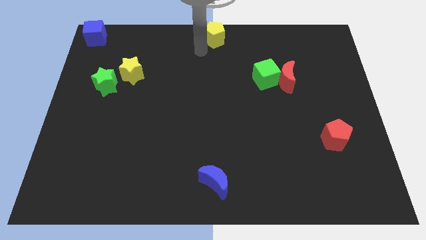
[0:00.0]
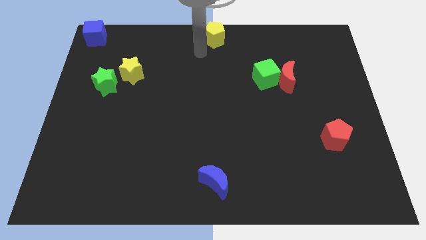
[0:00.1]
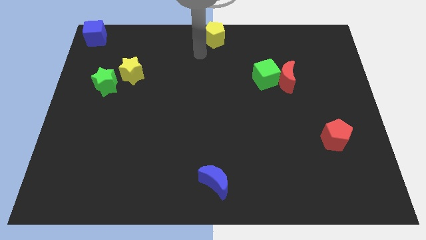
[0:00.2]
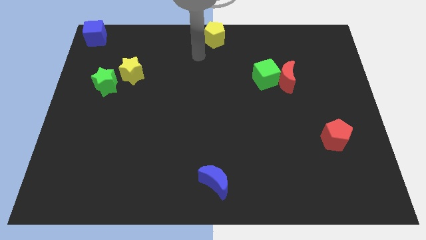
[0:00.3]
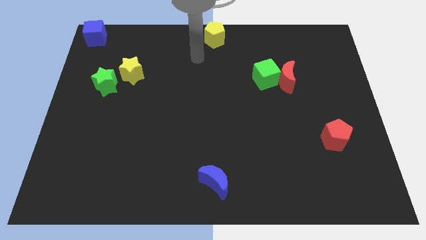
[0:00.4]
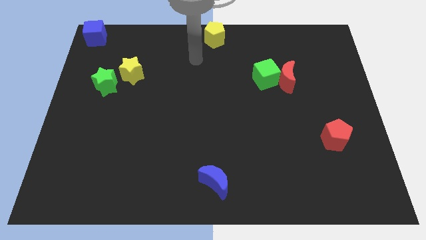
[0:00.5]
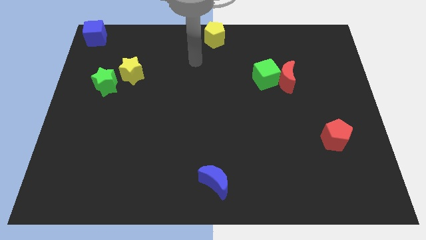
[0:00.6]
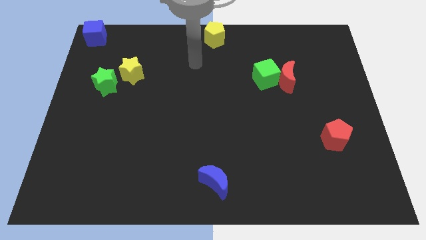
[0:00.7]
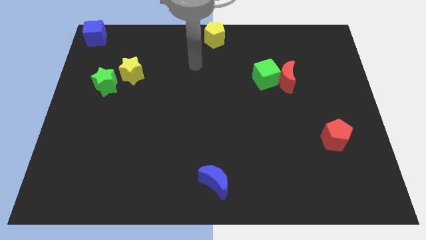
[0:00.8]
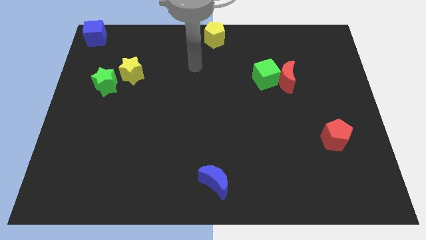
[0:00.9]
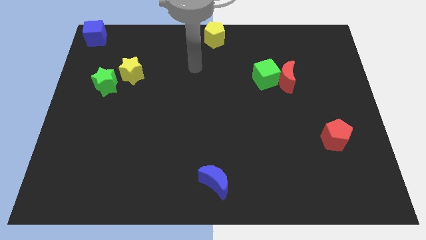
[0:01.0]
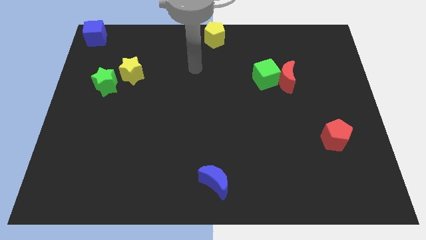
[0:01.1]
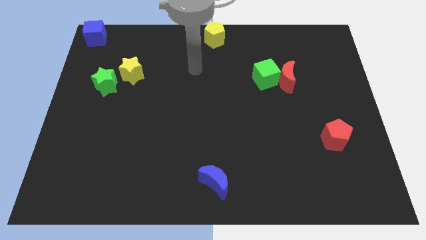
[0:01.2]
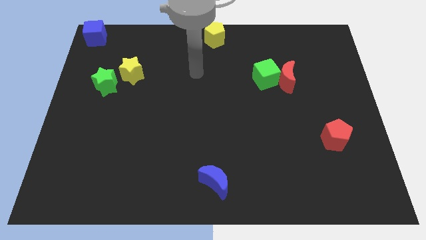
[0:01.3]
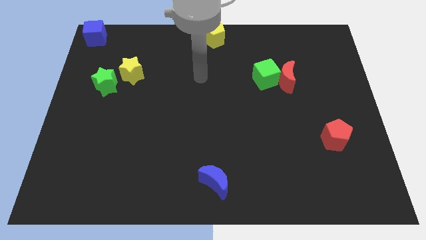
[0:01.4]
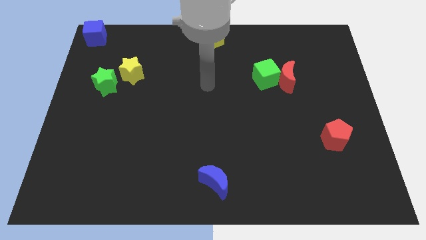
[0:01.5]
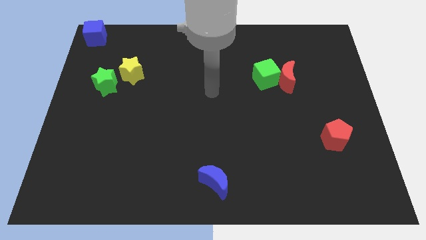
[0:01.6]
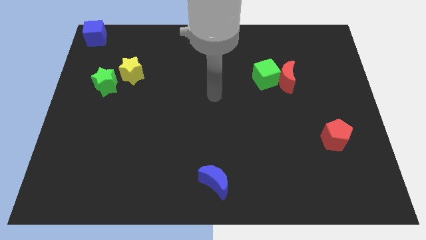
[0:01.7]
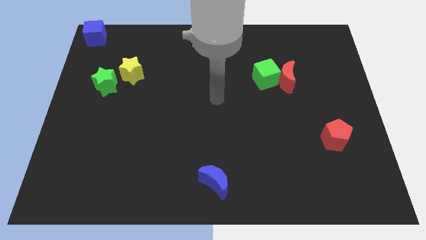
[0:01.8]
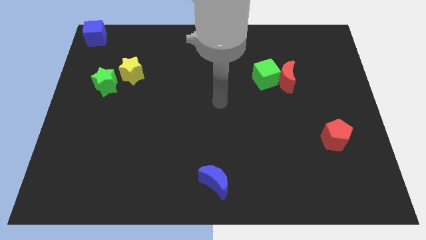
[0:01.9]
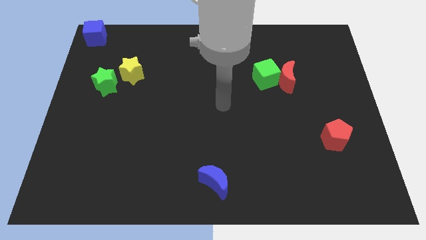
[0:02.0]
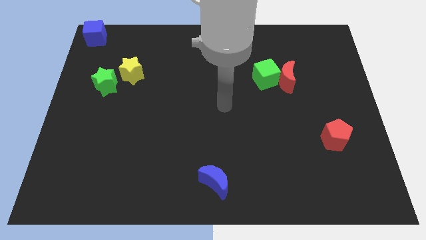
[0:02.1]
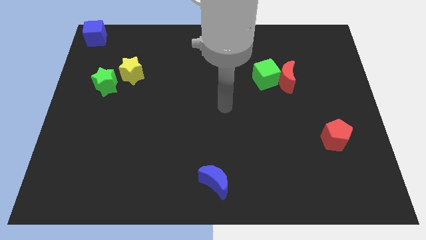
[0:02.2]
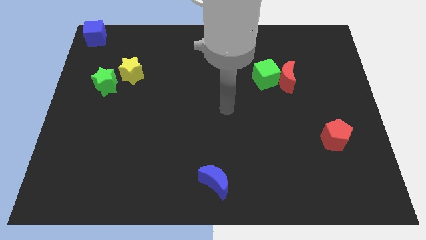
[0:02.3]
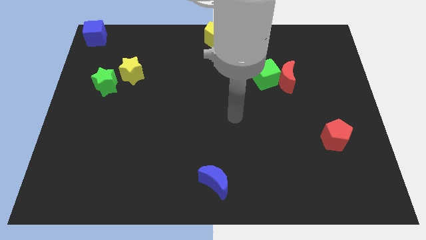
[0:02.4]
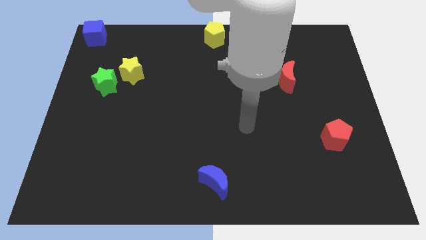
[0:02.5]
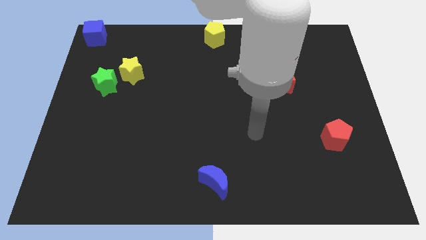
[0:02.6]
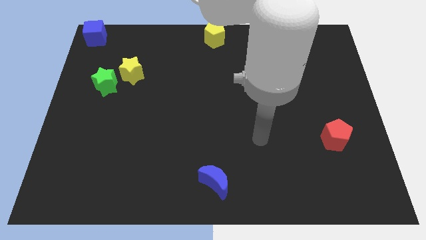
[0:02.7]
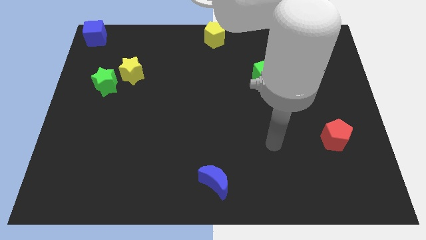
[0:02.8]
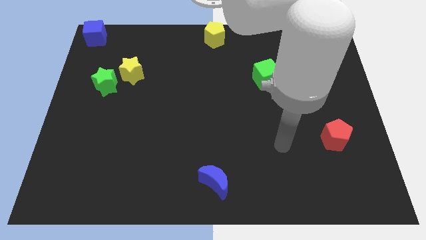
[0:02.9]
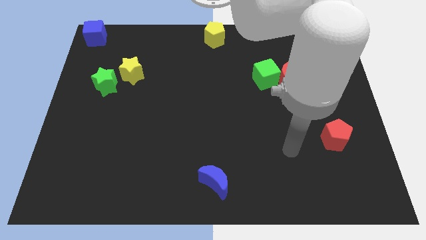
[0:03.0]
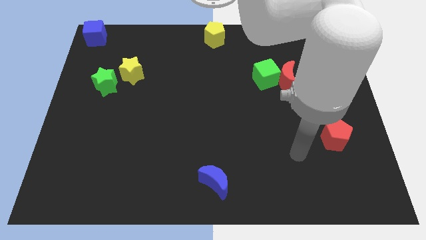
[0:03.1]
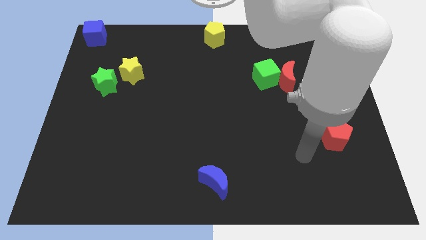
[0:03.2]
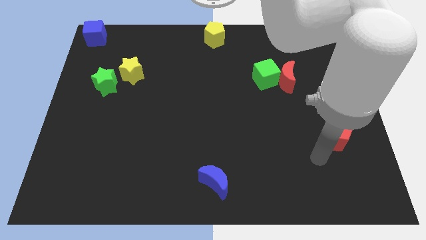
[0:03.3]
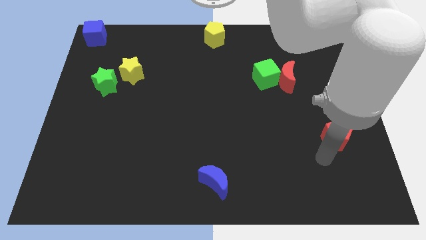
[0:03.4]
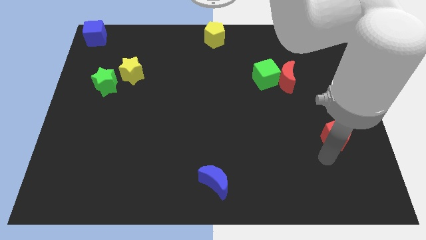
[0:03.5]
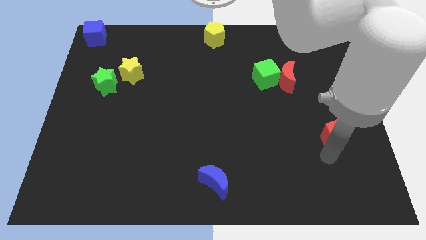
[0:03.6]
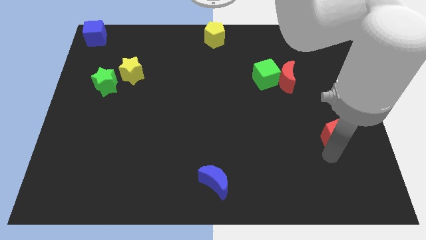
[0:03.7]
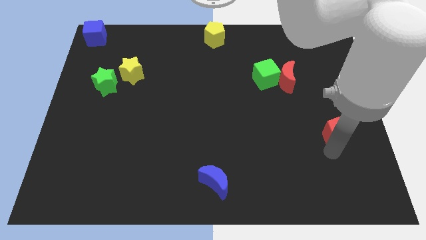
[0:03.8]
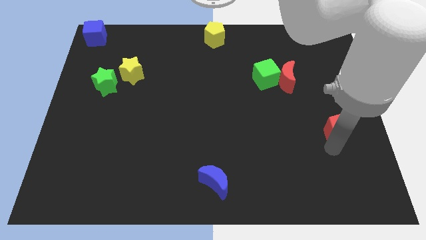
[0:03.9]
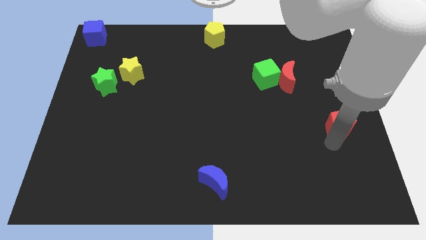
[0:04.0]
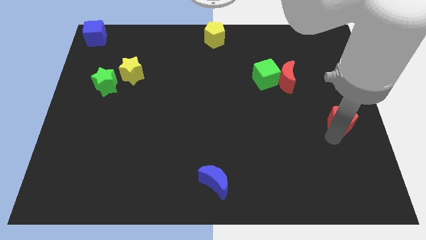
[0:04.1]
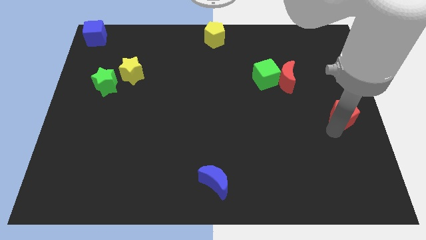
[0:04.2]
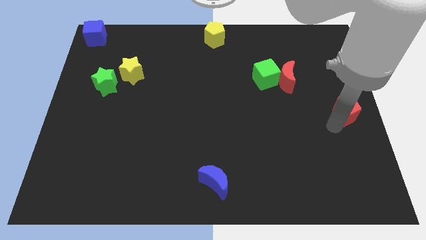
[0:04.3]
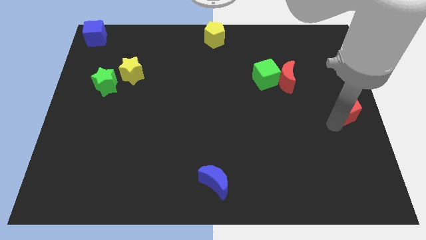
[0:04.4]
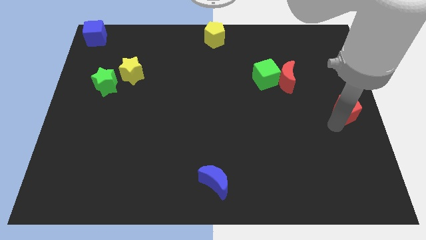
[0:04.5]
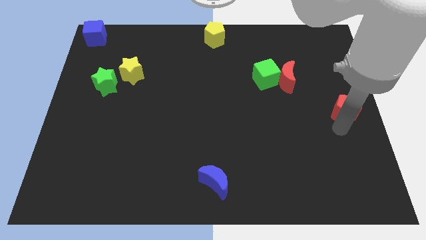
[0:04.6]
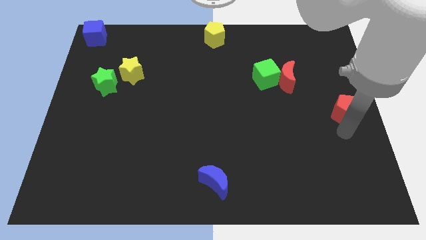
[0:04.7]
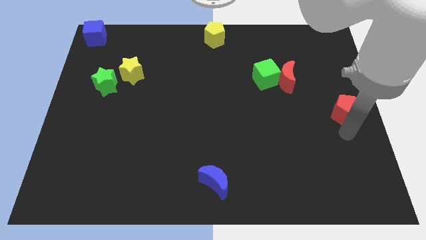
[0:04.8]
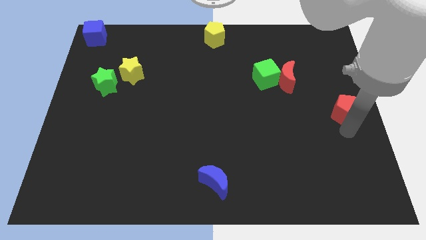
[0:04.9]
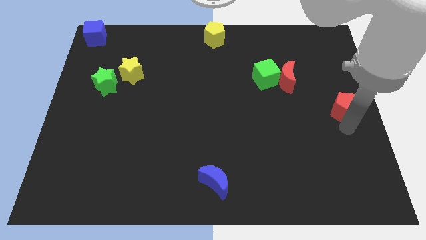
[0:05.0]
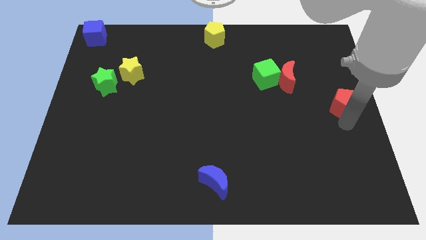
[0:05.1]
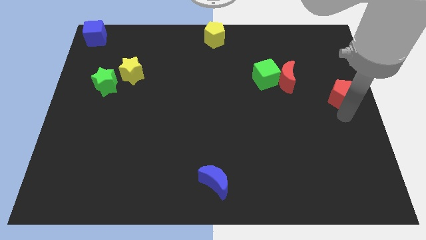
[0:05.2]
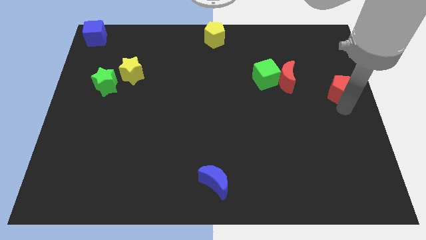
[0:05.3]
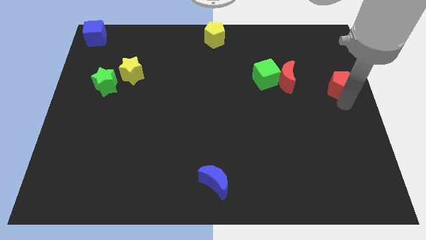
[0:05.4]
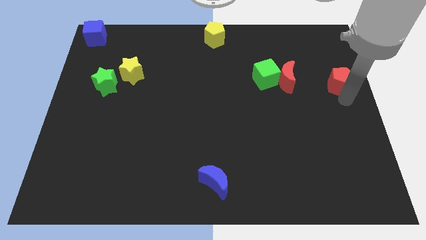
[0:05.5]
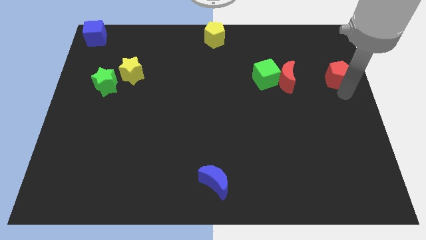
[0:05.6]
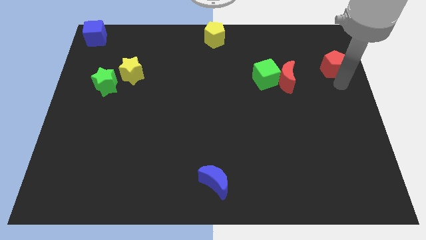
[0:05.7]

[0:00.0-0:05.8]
drag the red pentagon to the top right side of the table

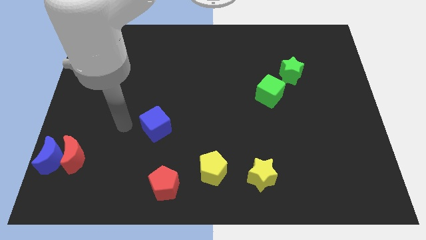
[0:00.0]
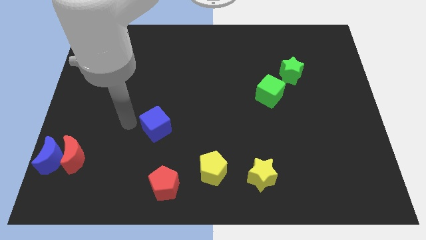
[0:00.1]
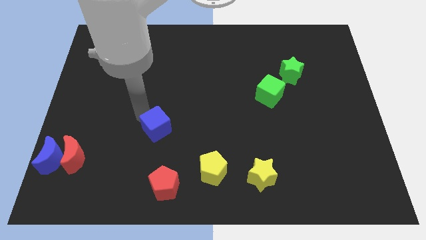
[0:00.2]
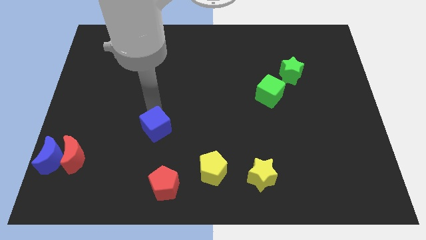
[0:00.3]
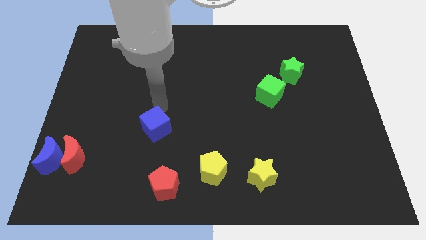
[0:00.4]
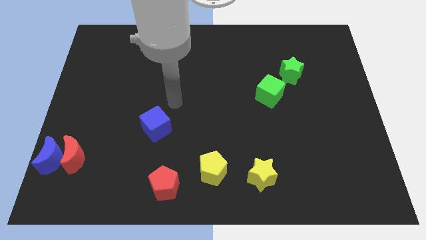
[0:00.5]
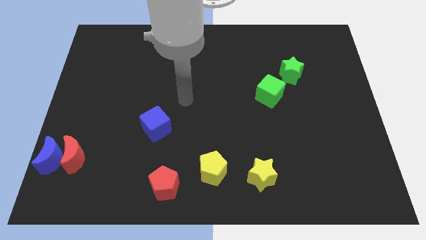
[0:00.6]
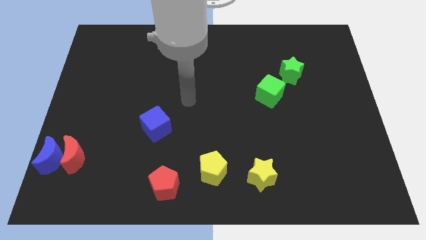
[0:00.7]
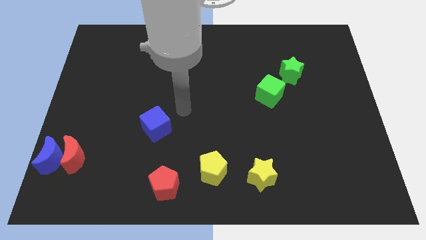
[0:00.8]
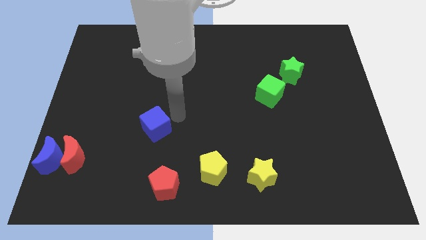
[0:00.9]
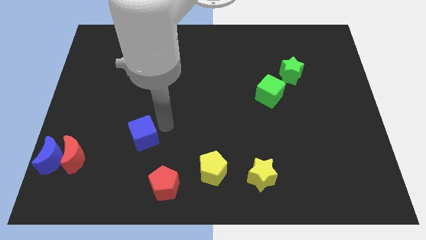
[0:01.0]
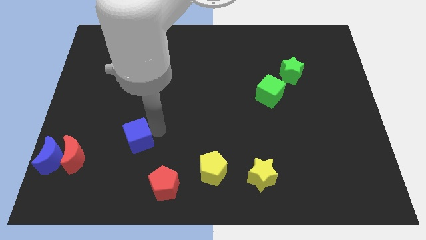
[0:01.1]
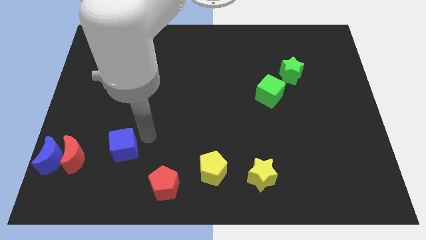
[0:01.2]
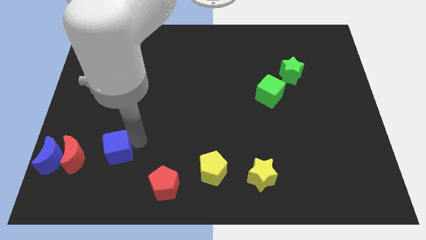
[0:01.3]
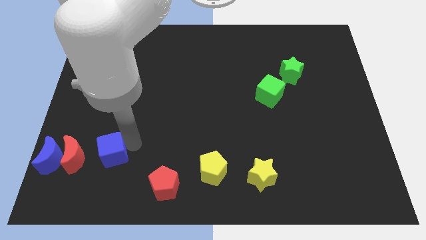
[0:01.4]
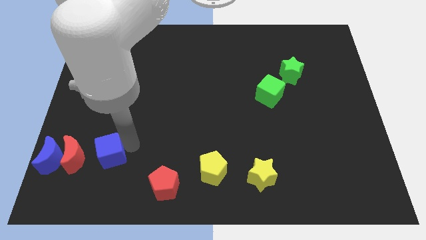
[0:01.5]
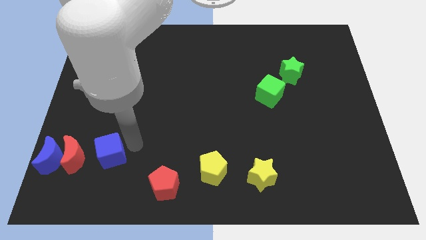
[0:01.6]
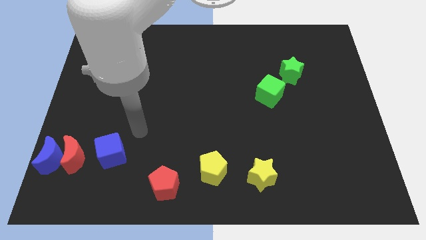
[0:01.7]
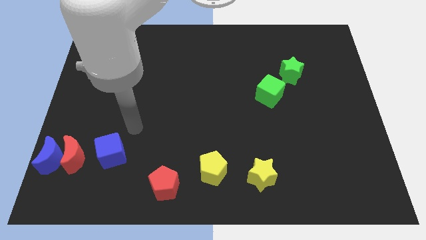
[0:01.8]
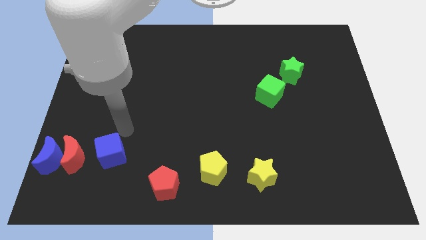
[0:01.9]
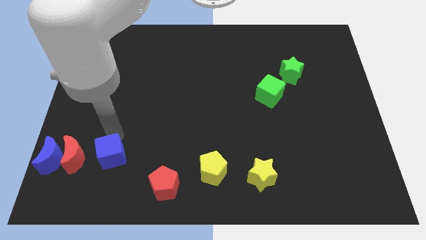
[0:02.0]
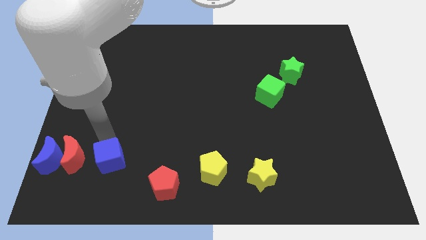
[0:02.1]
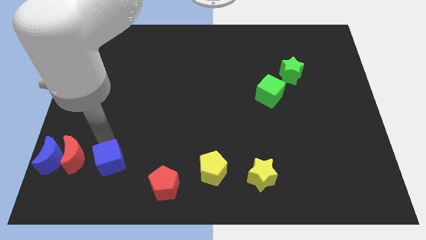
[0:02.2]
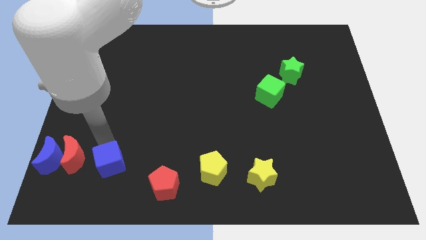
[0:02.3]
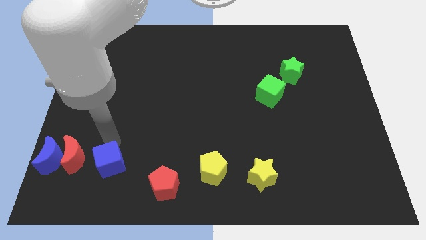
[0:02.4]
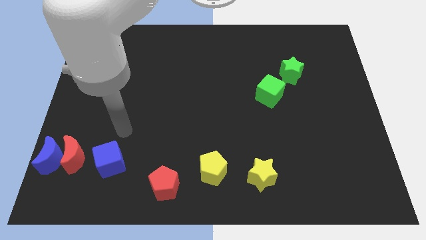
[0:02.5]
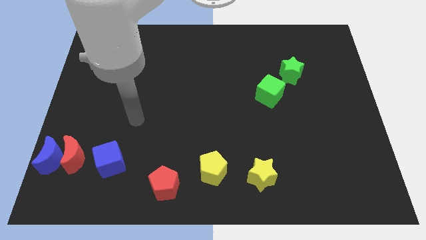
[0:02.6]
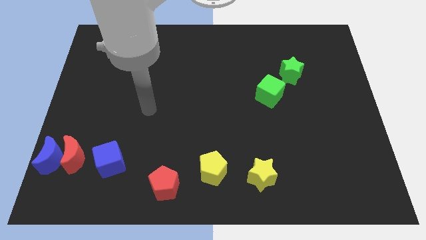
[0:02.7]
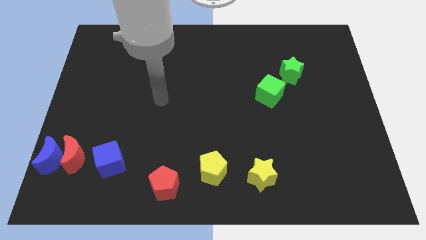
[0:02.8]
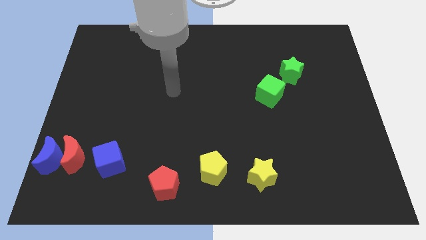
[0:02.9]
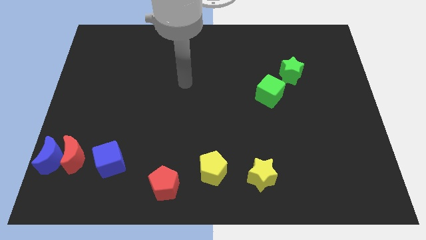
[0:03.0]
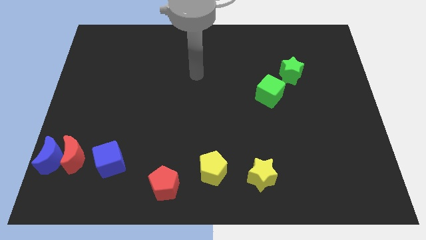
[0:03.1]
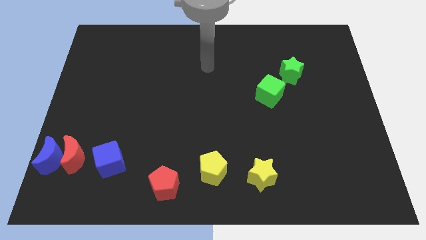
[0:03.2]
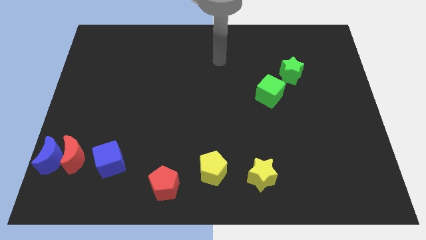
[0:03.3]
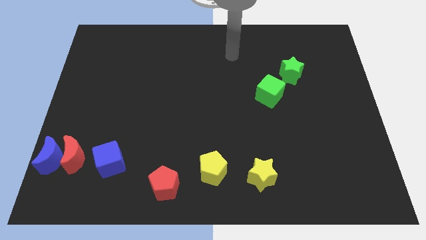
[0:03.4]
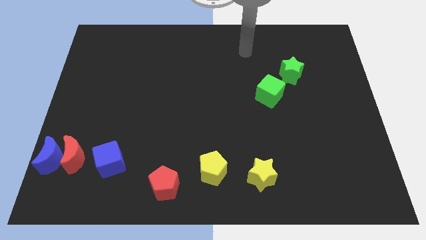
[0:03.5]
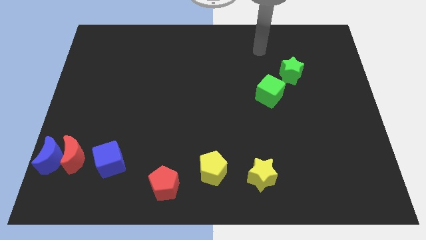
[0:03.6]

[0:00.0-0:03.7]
push the blue cube parallel right to the red moon
